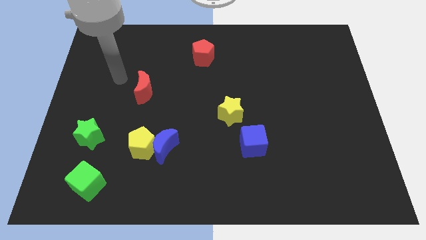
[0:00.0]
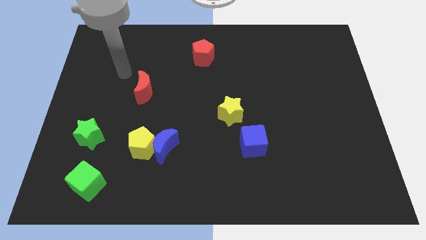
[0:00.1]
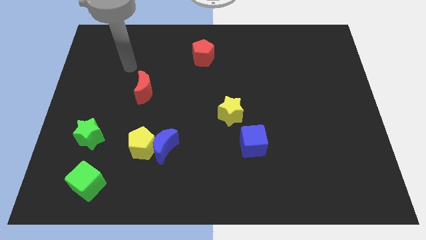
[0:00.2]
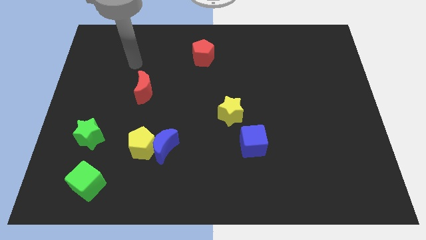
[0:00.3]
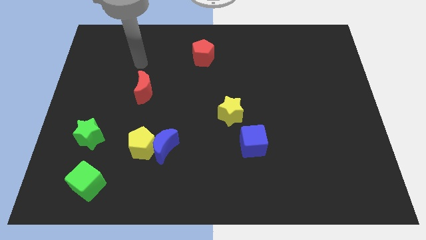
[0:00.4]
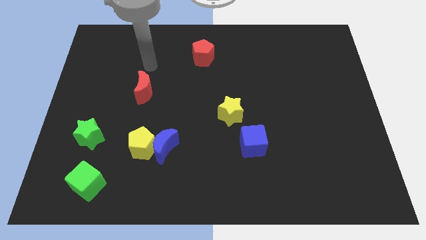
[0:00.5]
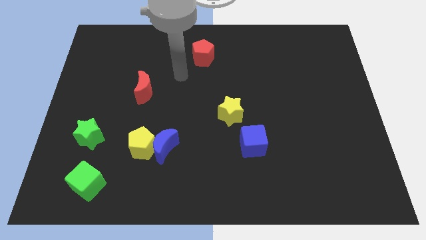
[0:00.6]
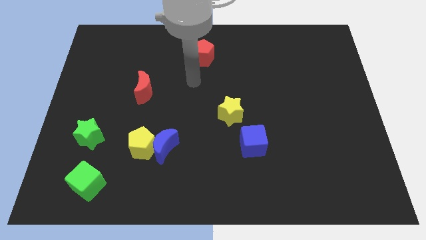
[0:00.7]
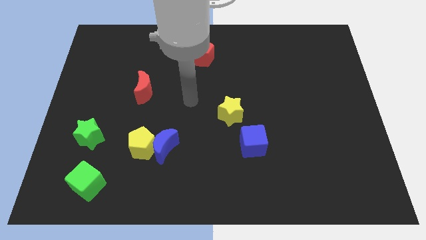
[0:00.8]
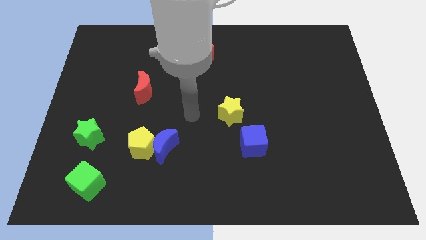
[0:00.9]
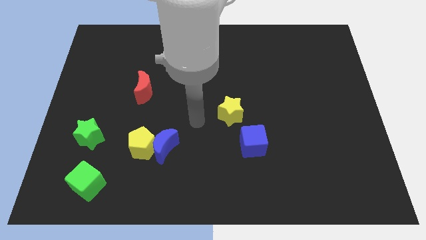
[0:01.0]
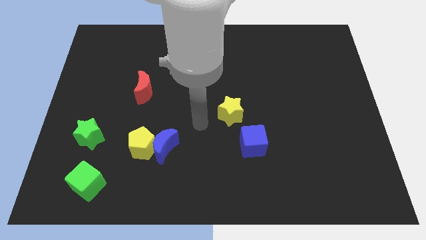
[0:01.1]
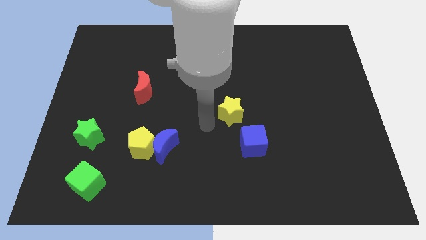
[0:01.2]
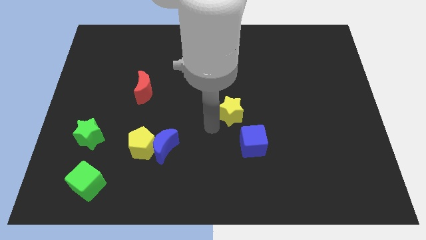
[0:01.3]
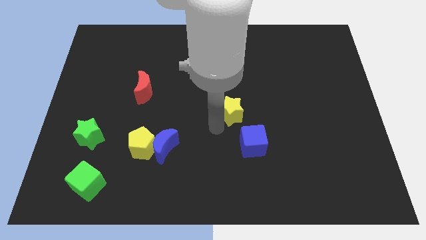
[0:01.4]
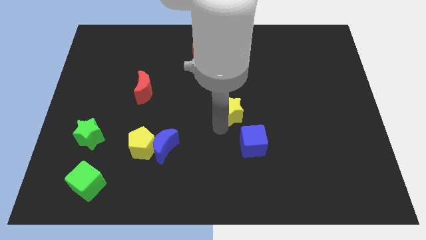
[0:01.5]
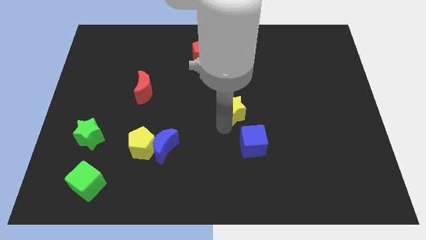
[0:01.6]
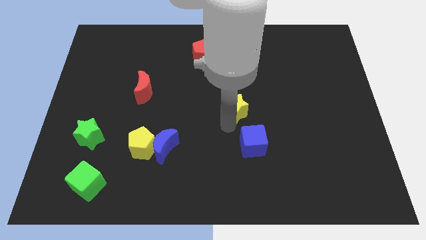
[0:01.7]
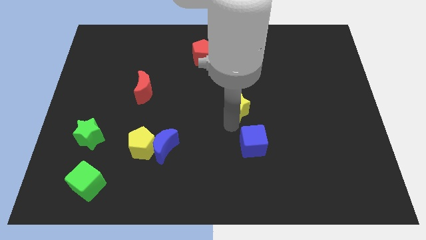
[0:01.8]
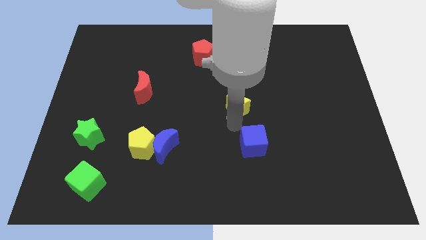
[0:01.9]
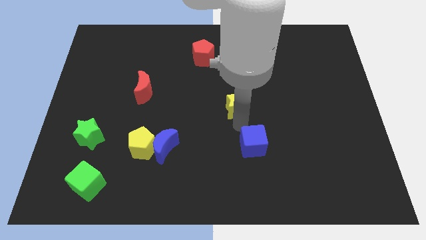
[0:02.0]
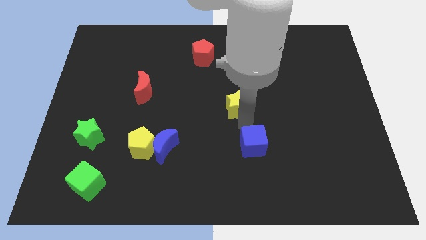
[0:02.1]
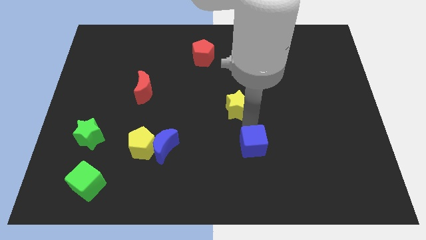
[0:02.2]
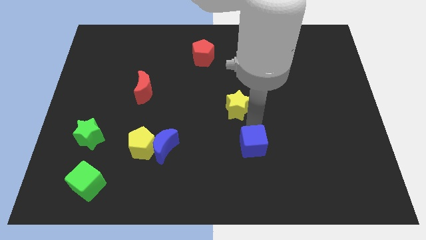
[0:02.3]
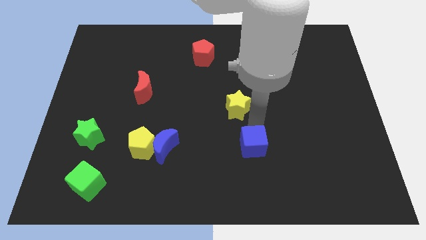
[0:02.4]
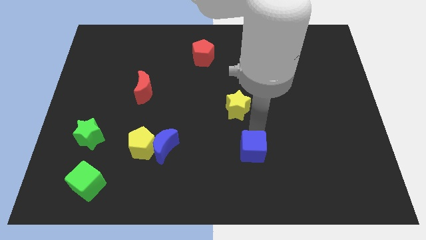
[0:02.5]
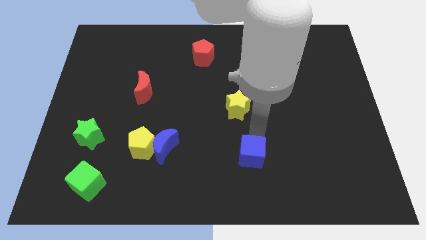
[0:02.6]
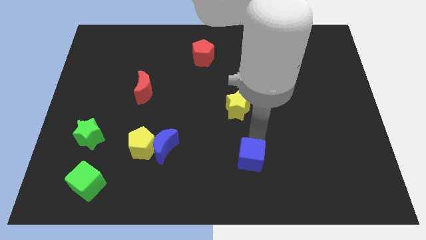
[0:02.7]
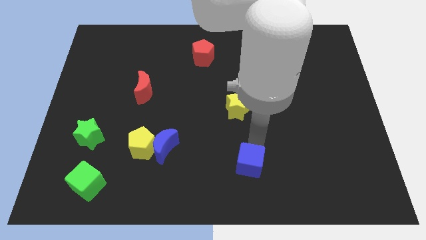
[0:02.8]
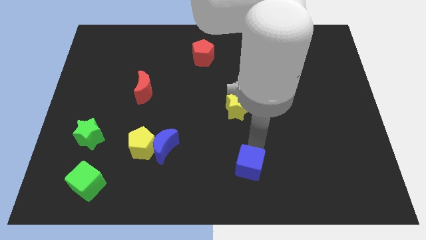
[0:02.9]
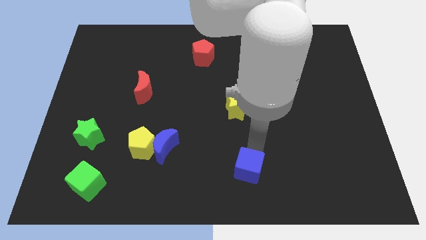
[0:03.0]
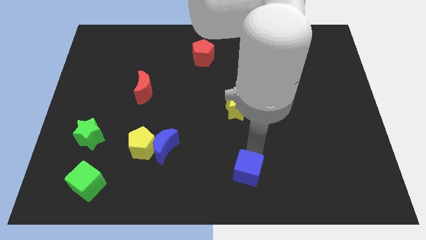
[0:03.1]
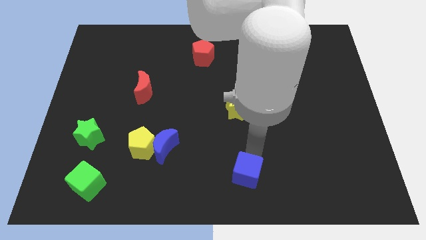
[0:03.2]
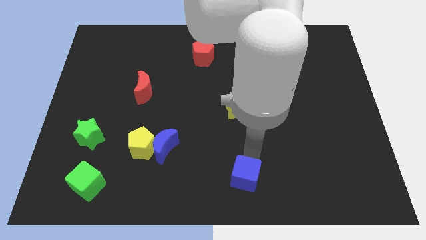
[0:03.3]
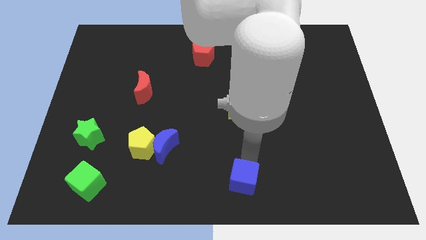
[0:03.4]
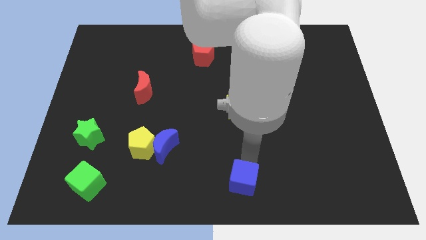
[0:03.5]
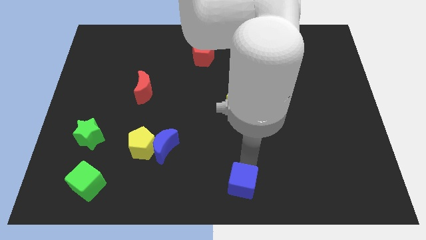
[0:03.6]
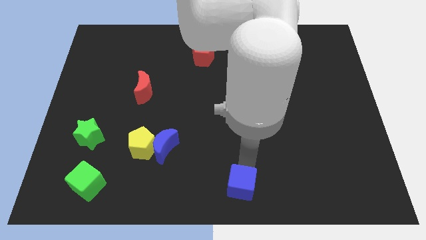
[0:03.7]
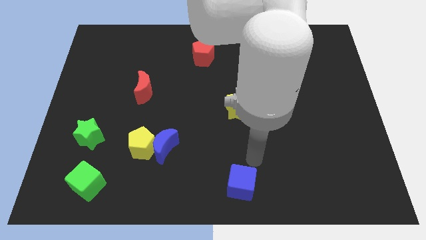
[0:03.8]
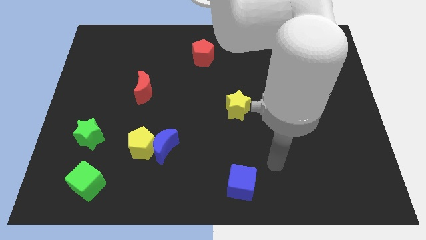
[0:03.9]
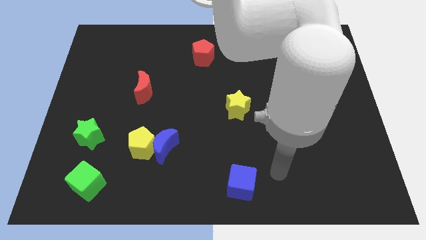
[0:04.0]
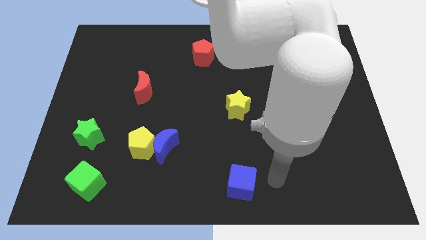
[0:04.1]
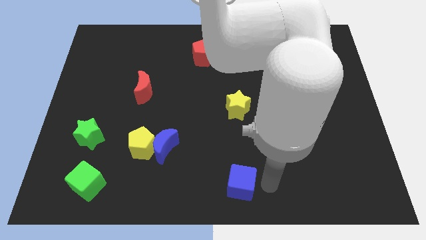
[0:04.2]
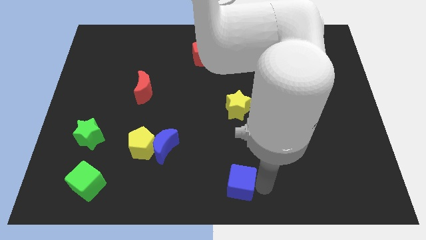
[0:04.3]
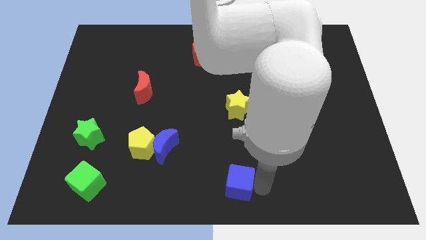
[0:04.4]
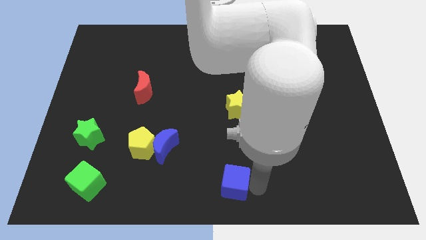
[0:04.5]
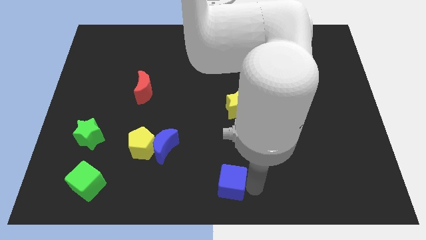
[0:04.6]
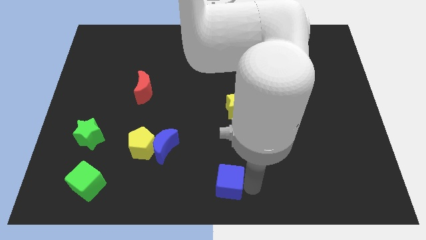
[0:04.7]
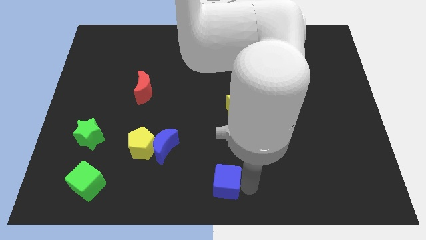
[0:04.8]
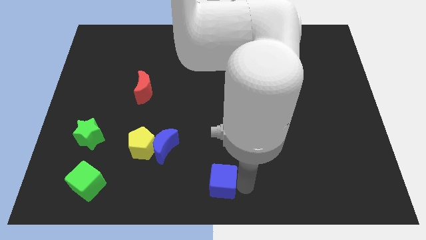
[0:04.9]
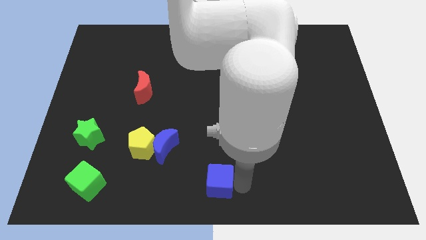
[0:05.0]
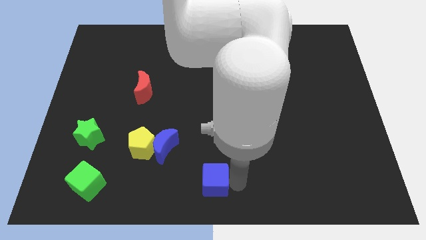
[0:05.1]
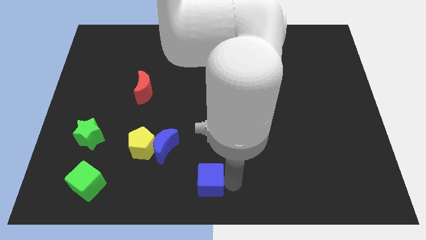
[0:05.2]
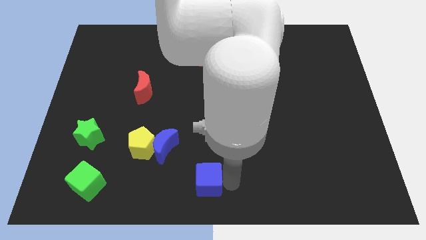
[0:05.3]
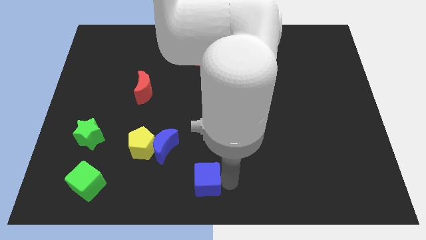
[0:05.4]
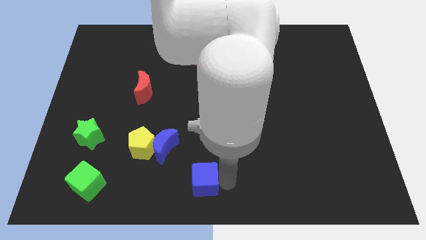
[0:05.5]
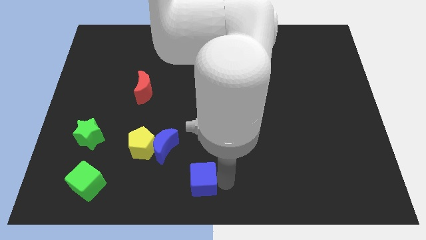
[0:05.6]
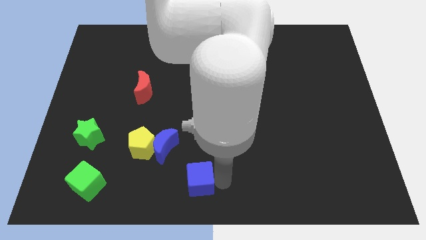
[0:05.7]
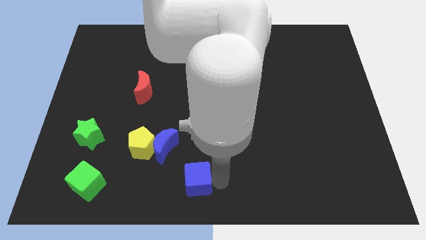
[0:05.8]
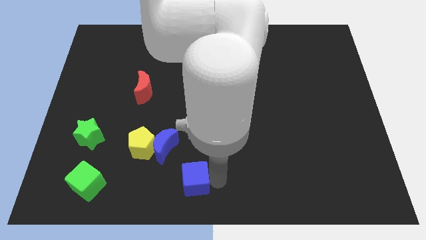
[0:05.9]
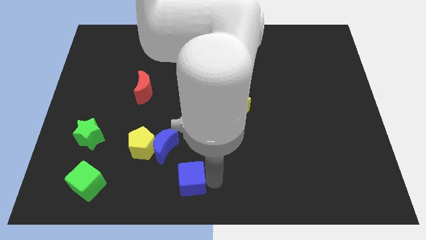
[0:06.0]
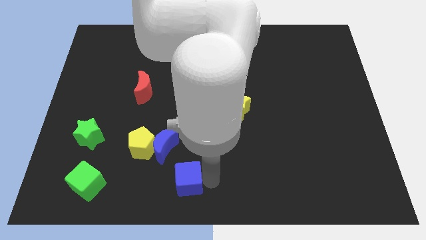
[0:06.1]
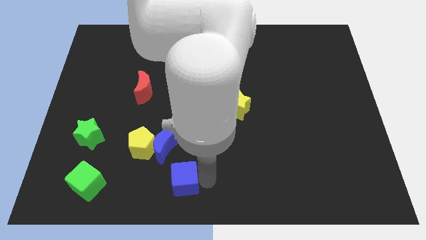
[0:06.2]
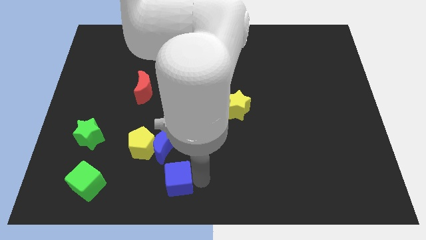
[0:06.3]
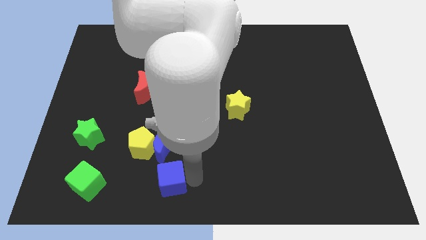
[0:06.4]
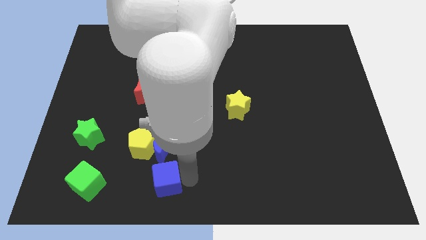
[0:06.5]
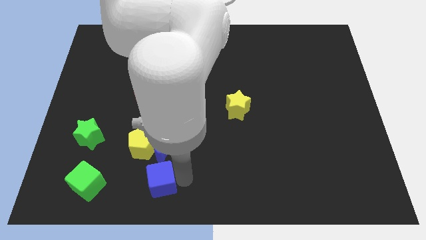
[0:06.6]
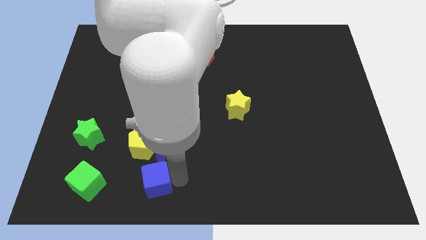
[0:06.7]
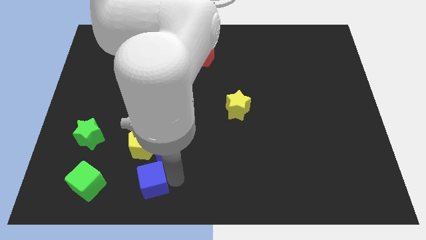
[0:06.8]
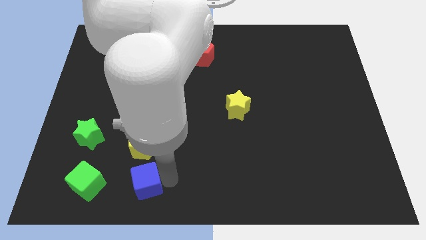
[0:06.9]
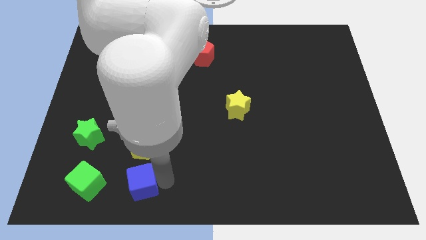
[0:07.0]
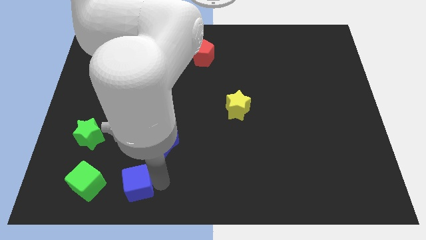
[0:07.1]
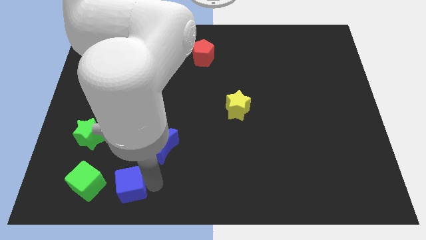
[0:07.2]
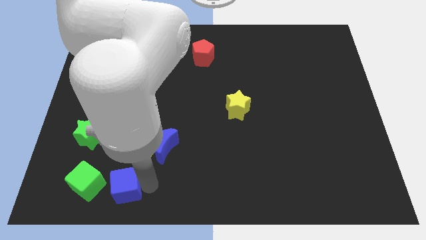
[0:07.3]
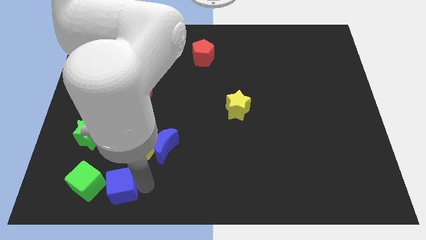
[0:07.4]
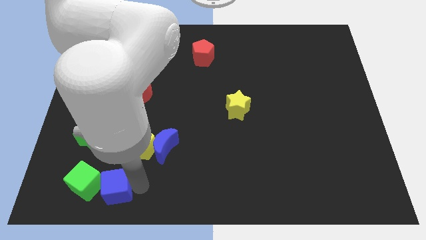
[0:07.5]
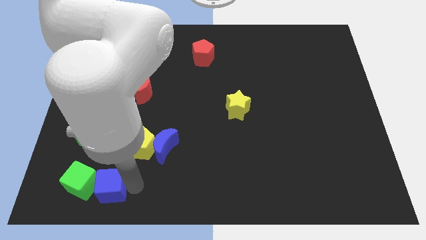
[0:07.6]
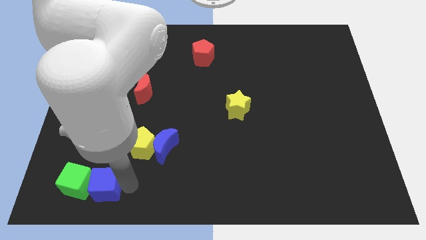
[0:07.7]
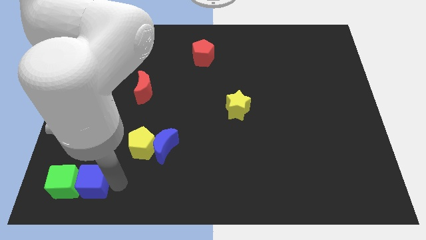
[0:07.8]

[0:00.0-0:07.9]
put the blue cube next to the green cube

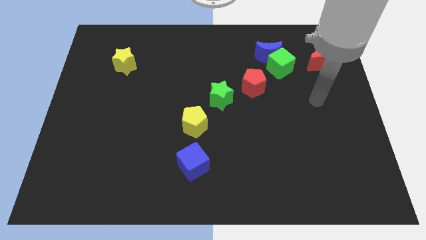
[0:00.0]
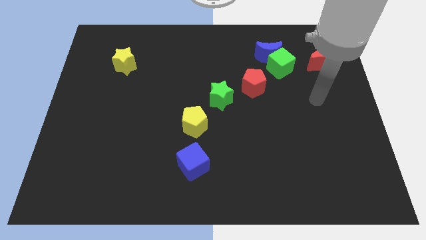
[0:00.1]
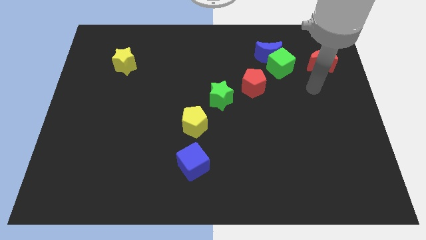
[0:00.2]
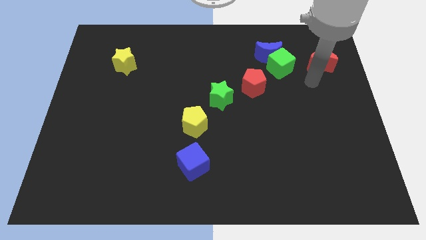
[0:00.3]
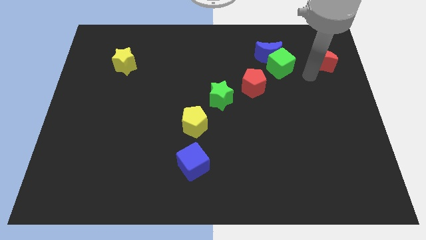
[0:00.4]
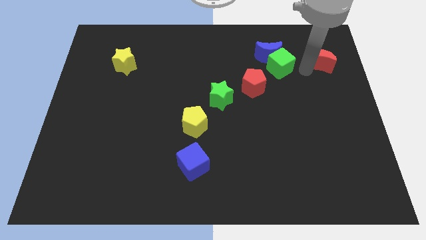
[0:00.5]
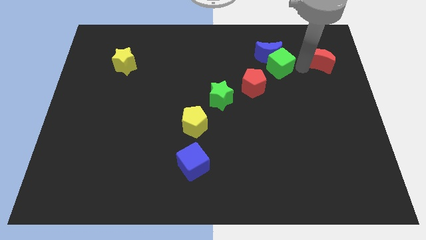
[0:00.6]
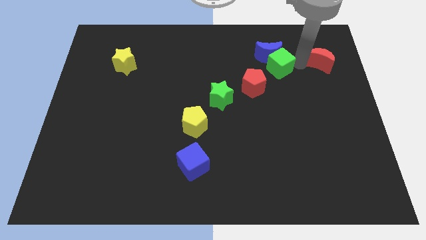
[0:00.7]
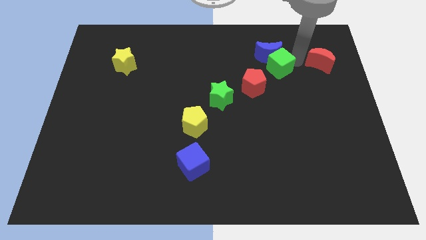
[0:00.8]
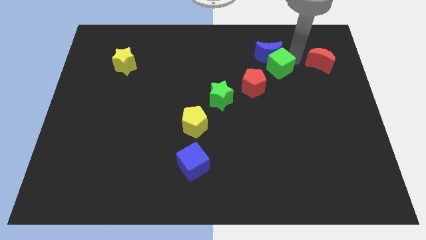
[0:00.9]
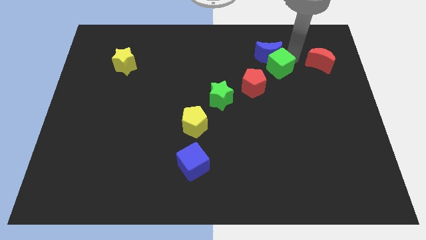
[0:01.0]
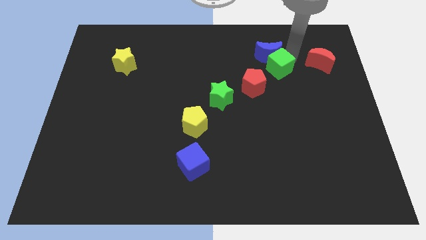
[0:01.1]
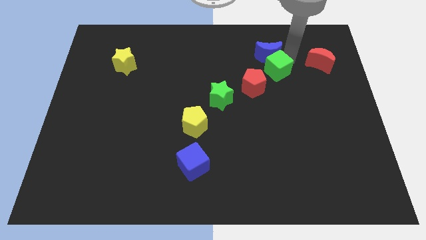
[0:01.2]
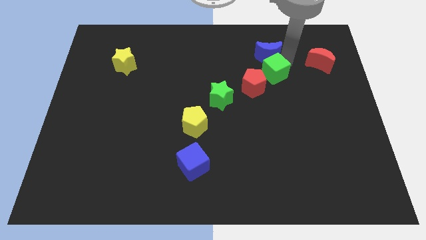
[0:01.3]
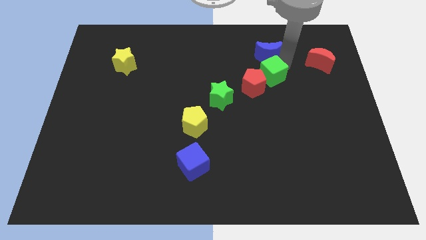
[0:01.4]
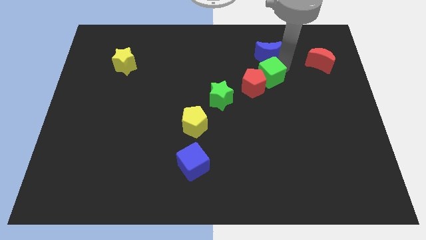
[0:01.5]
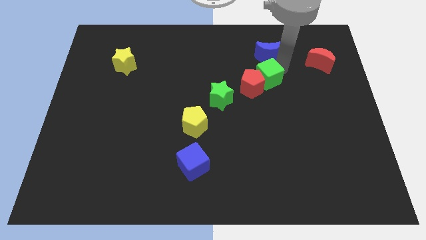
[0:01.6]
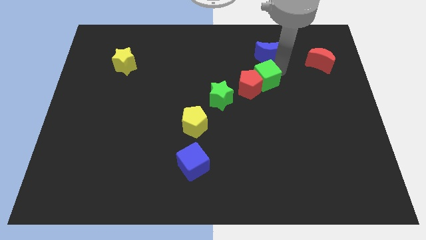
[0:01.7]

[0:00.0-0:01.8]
slide the green cube to the red pentagon
